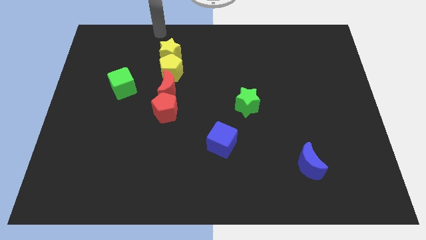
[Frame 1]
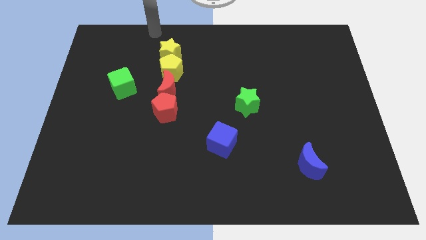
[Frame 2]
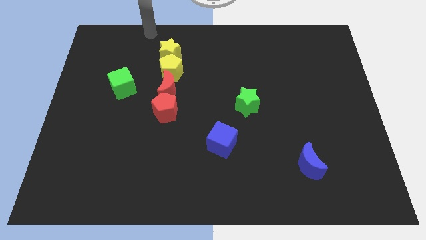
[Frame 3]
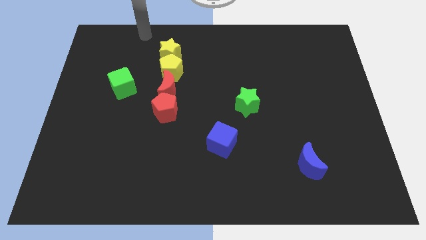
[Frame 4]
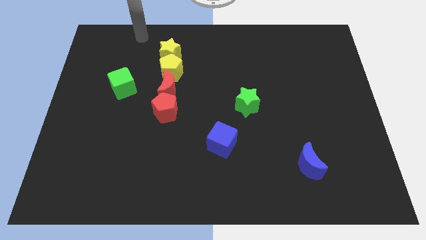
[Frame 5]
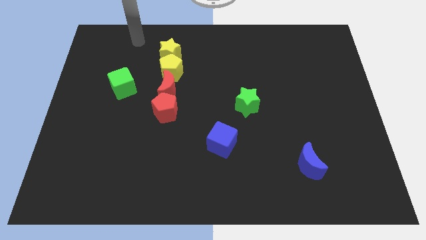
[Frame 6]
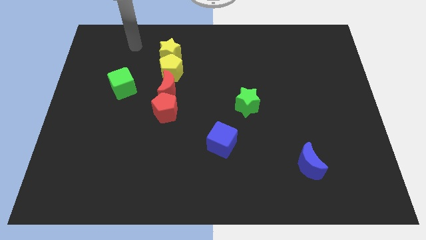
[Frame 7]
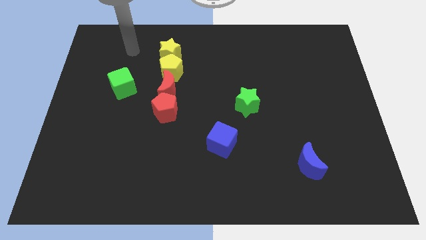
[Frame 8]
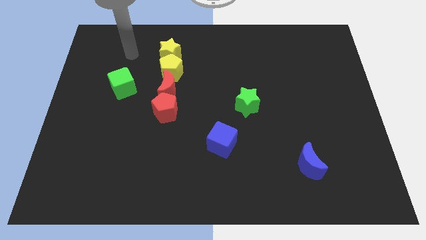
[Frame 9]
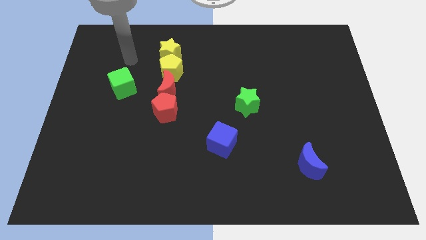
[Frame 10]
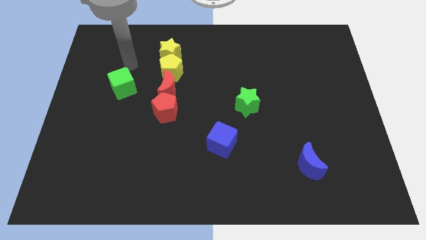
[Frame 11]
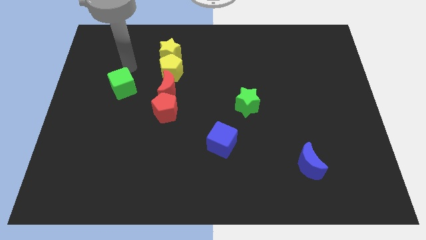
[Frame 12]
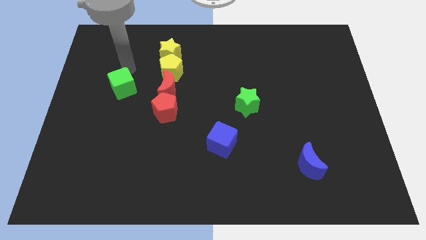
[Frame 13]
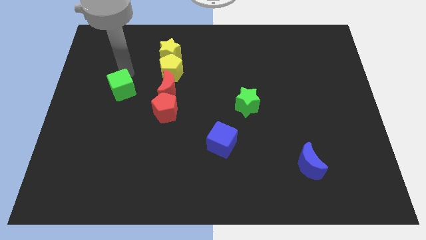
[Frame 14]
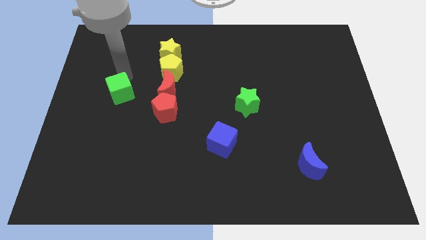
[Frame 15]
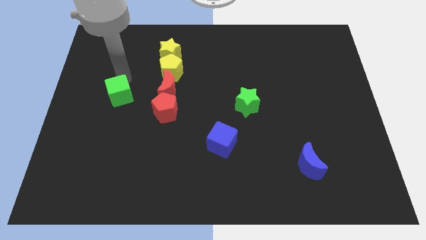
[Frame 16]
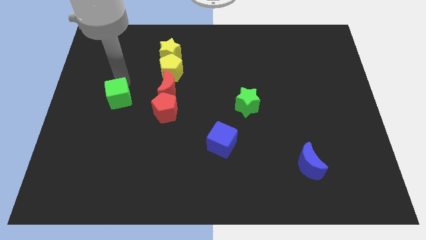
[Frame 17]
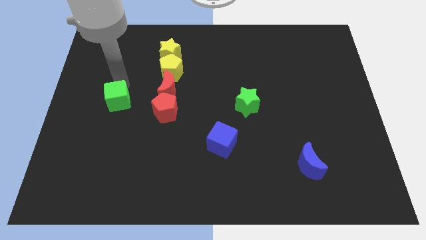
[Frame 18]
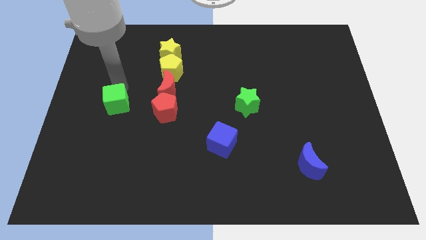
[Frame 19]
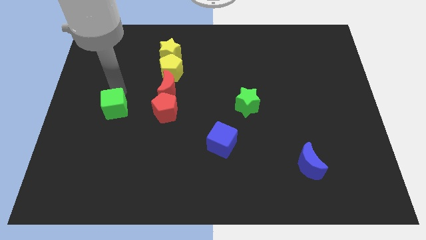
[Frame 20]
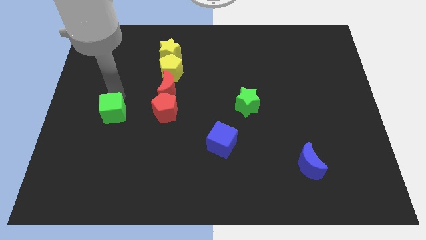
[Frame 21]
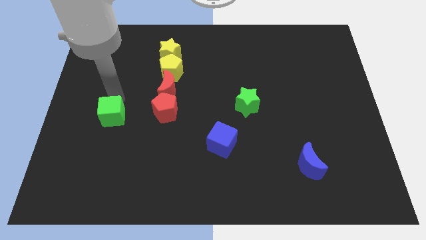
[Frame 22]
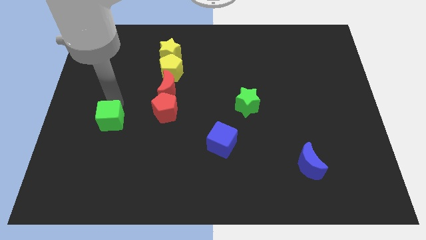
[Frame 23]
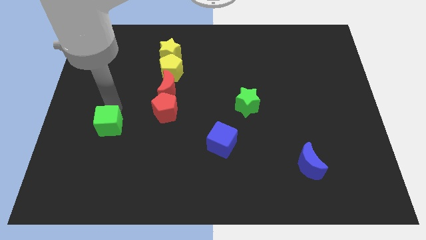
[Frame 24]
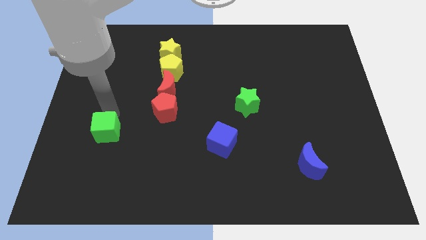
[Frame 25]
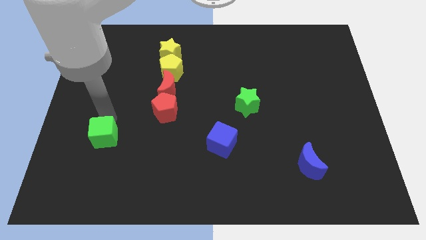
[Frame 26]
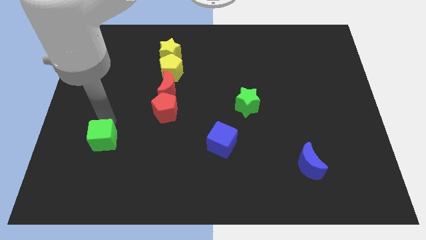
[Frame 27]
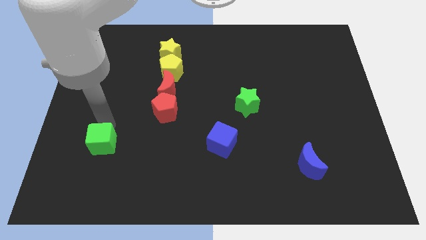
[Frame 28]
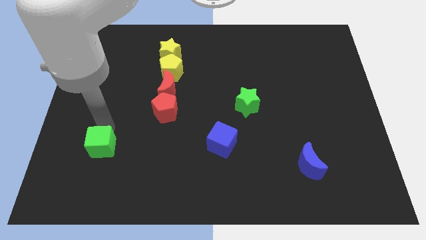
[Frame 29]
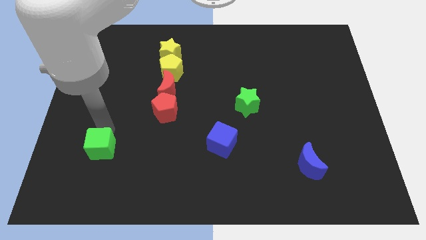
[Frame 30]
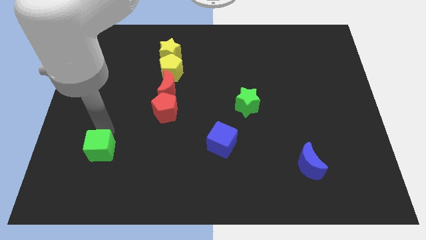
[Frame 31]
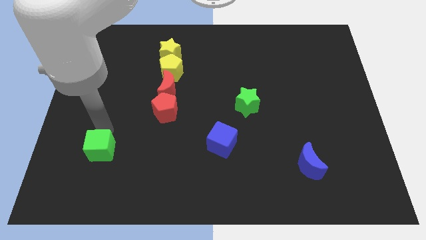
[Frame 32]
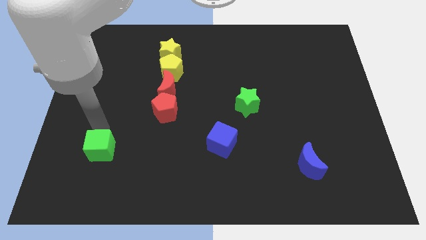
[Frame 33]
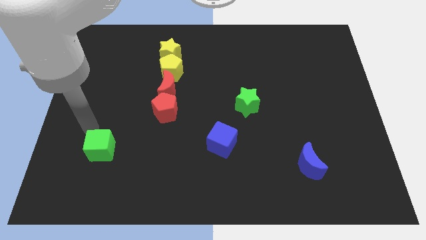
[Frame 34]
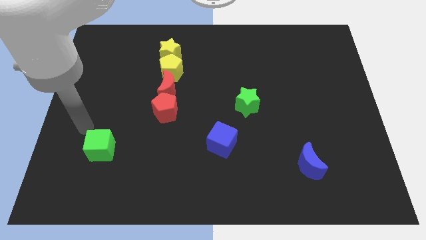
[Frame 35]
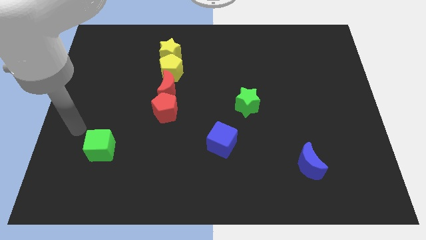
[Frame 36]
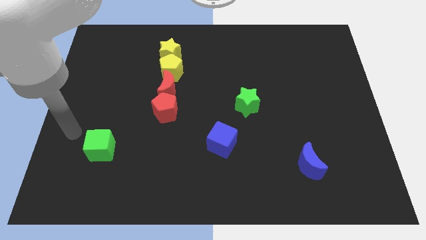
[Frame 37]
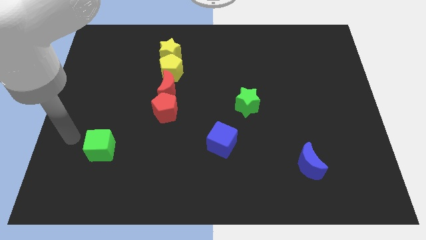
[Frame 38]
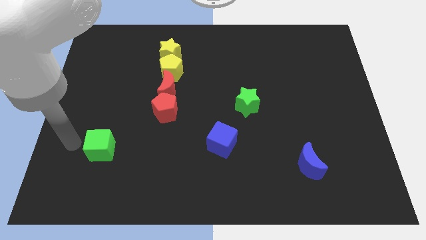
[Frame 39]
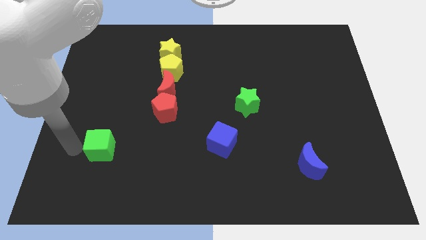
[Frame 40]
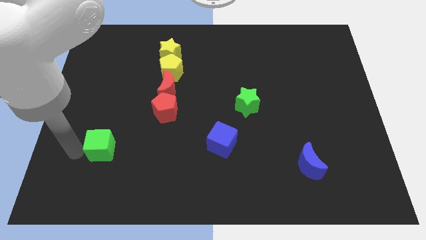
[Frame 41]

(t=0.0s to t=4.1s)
move the green cube to the horizontal left of the blue cube

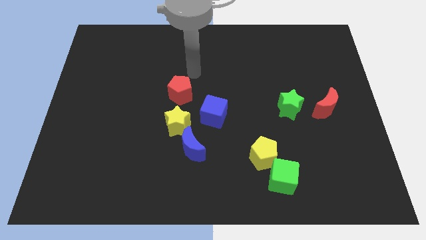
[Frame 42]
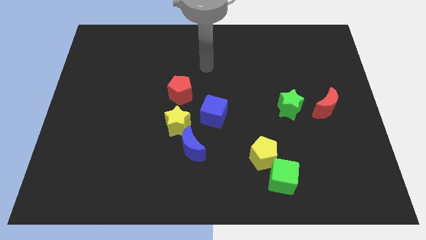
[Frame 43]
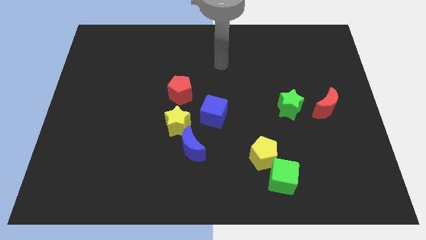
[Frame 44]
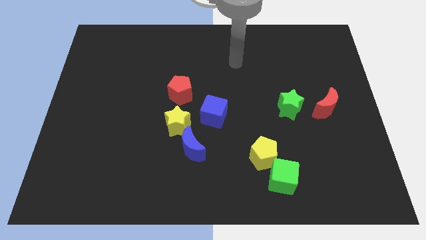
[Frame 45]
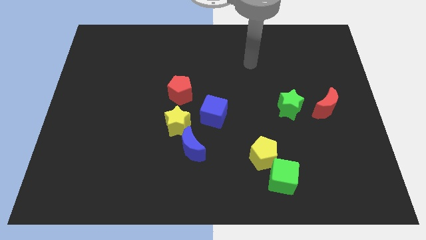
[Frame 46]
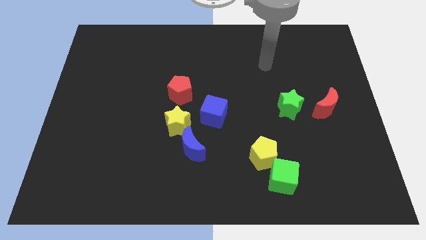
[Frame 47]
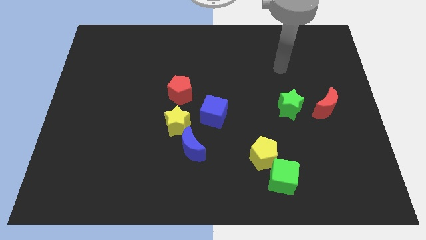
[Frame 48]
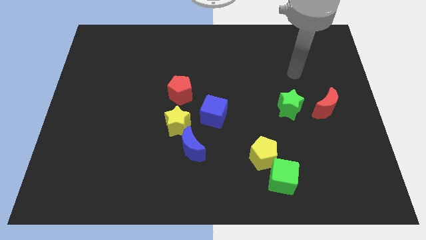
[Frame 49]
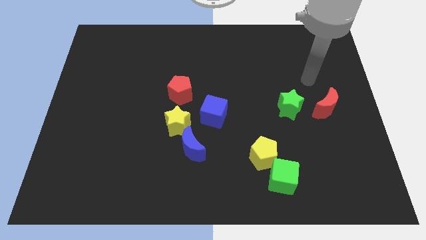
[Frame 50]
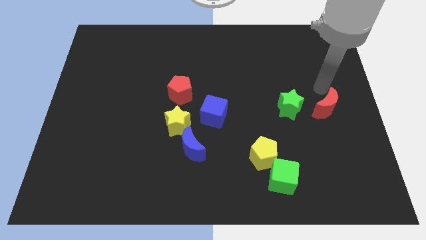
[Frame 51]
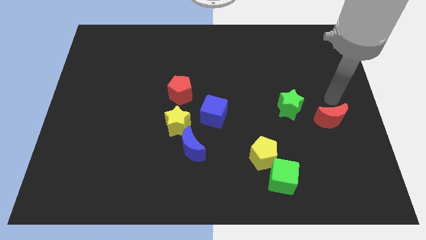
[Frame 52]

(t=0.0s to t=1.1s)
move the arm away from the red pentagon

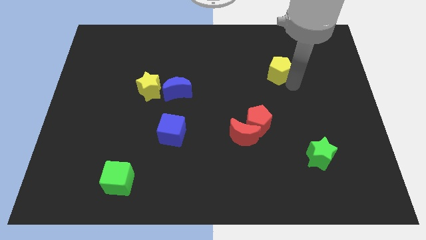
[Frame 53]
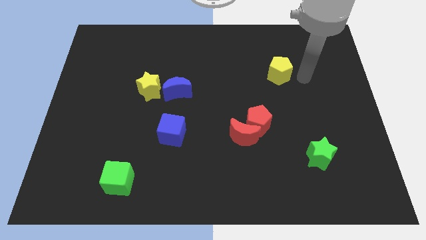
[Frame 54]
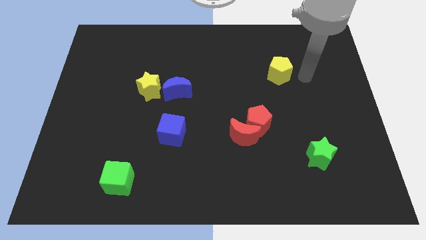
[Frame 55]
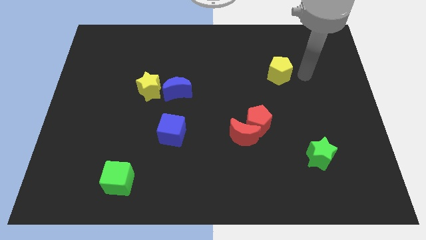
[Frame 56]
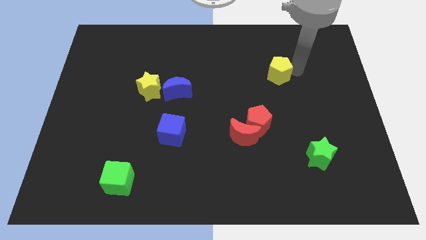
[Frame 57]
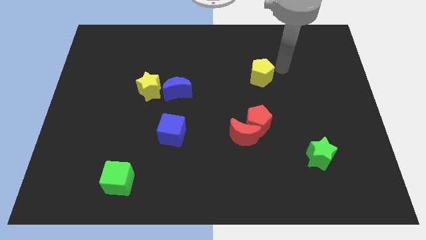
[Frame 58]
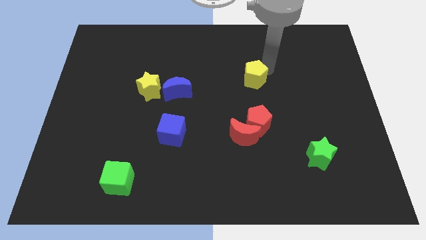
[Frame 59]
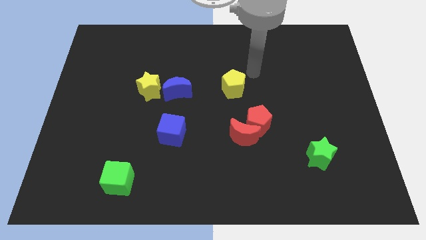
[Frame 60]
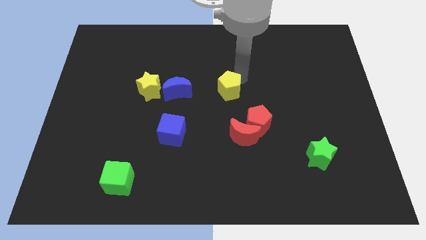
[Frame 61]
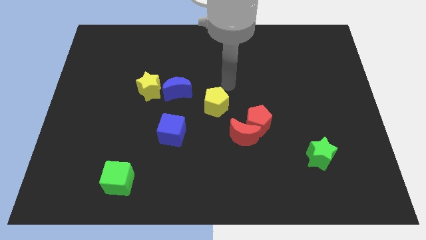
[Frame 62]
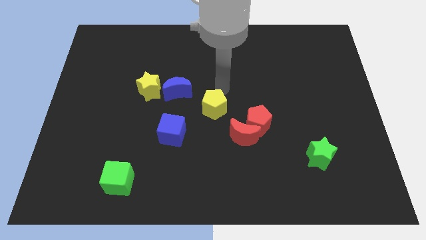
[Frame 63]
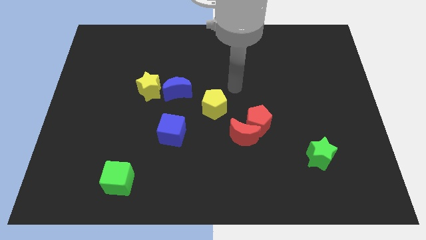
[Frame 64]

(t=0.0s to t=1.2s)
push yellow pentagon towards blue cube

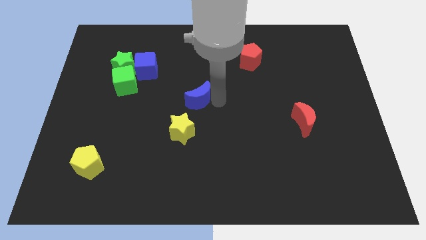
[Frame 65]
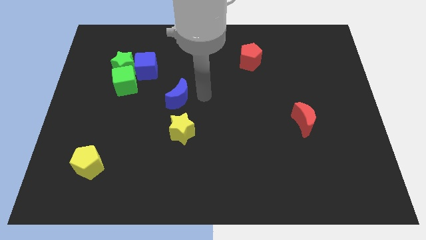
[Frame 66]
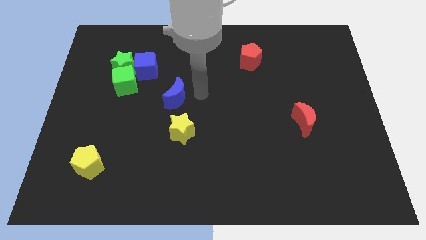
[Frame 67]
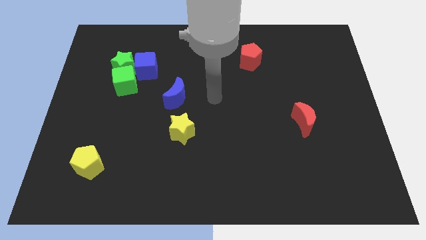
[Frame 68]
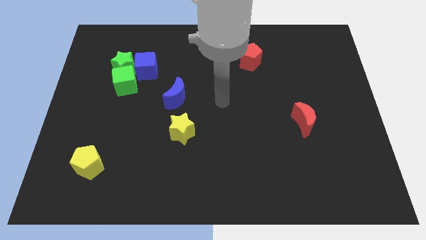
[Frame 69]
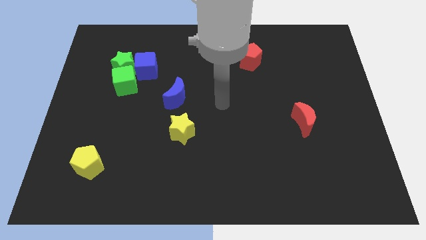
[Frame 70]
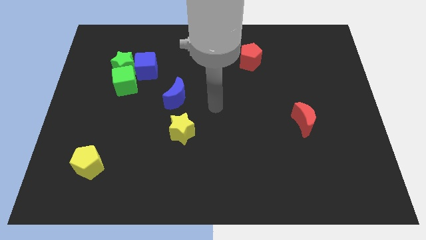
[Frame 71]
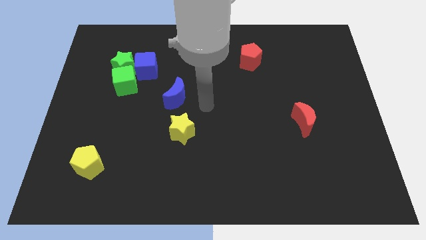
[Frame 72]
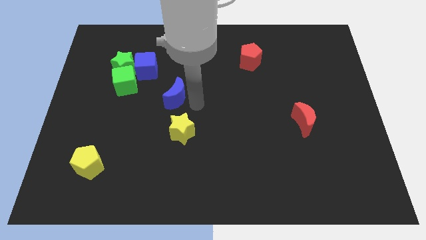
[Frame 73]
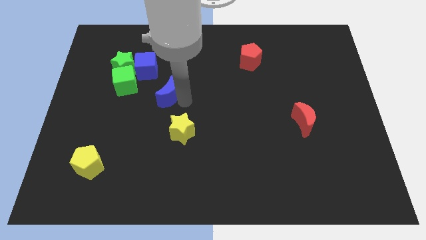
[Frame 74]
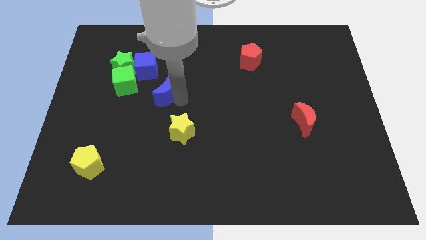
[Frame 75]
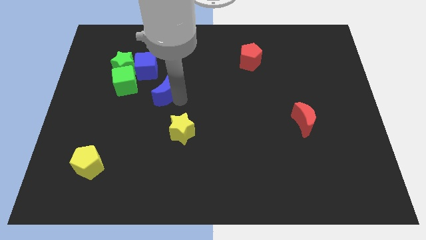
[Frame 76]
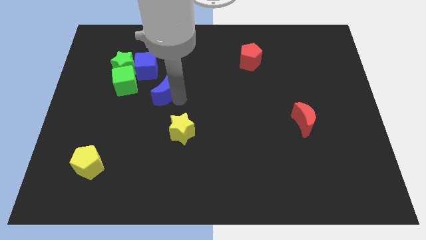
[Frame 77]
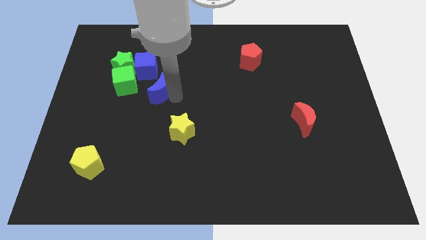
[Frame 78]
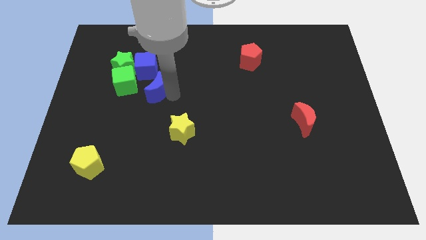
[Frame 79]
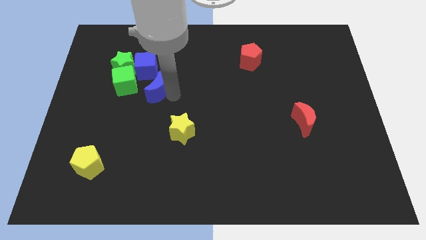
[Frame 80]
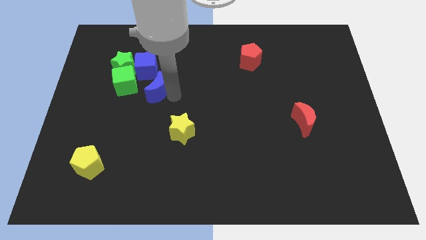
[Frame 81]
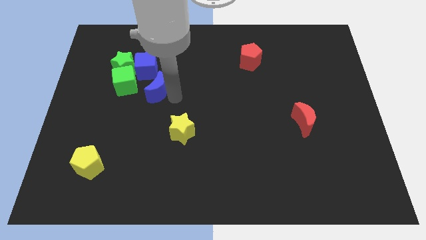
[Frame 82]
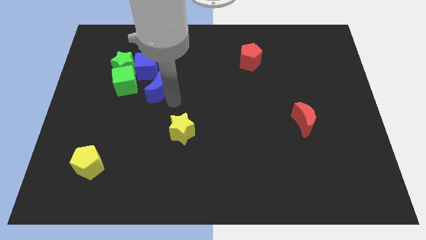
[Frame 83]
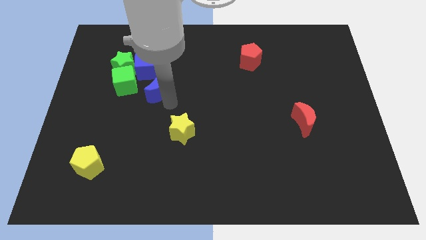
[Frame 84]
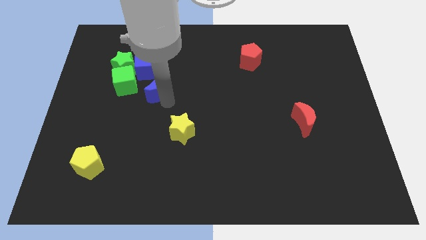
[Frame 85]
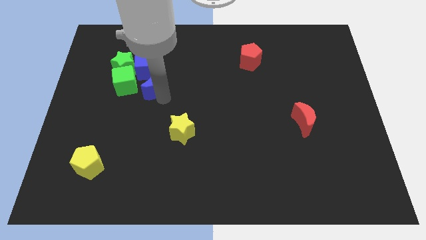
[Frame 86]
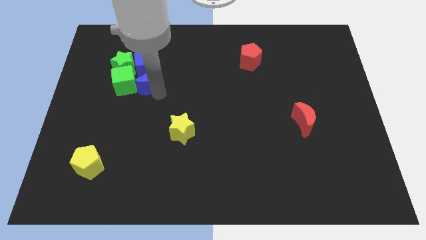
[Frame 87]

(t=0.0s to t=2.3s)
place the blue moon below the blue cube

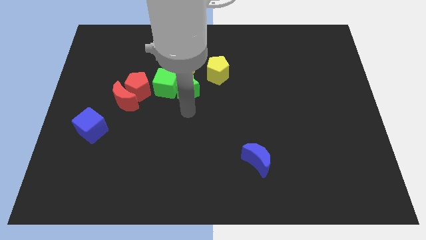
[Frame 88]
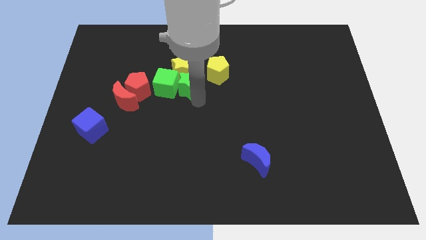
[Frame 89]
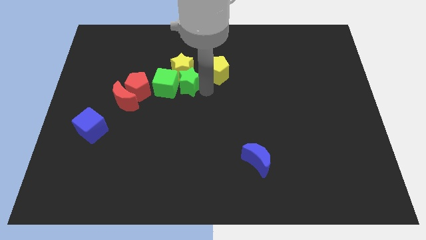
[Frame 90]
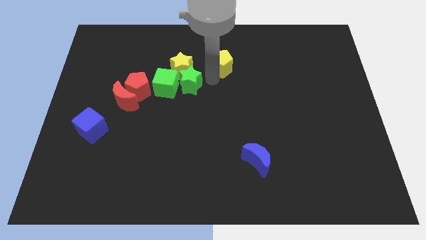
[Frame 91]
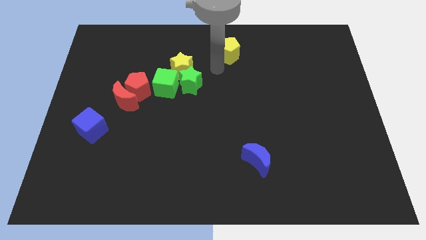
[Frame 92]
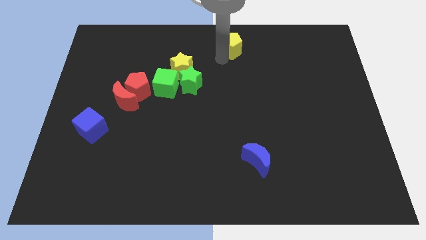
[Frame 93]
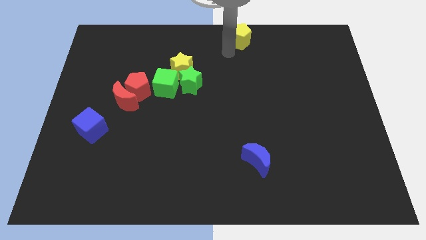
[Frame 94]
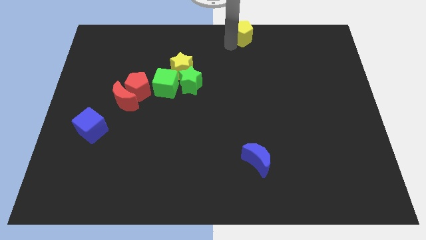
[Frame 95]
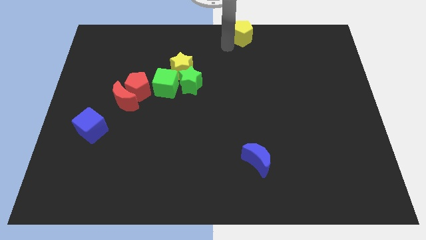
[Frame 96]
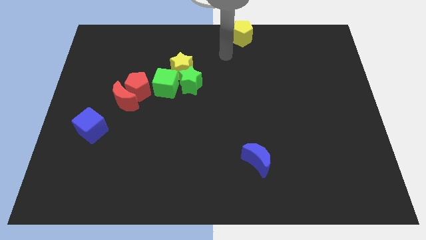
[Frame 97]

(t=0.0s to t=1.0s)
push the yellow pentagon to the top center of the board
